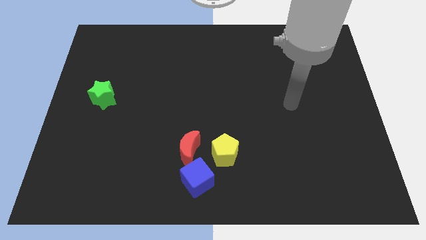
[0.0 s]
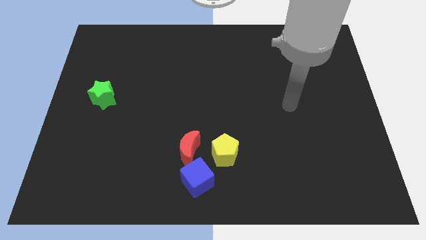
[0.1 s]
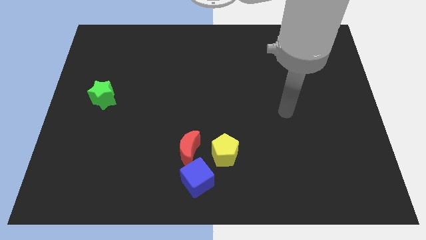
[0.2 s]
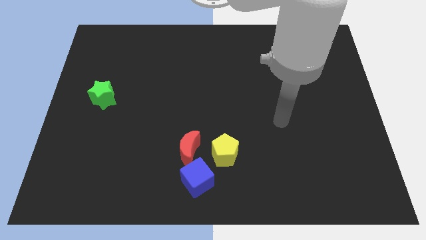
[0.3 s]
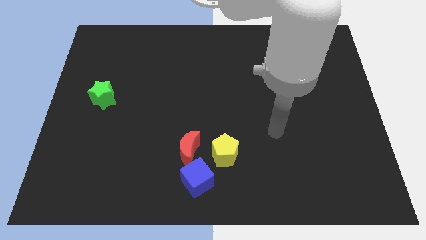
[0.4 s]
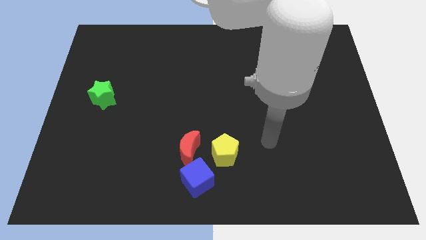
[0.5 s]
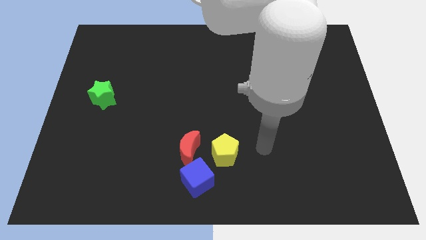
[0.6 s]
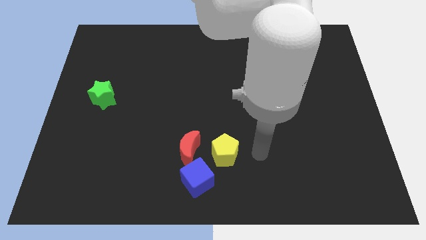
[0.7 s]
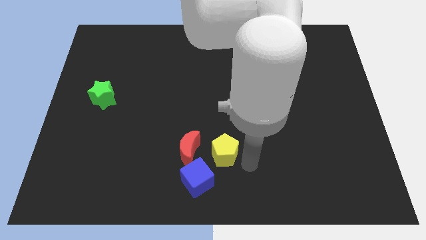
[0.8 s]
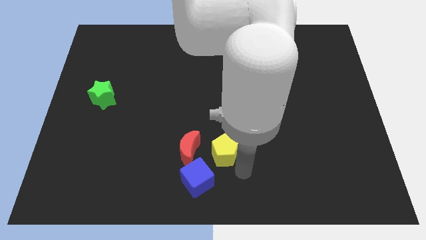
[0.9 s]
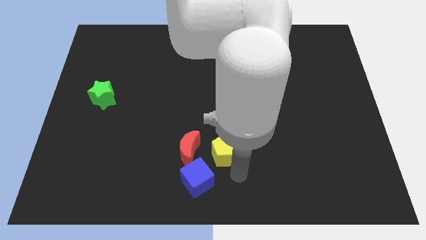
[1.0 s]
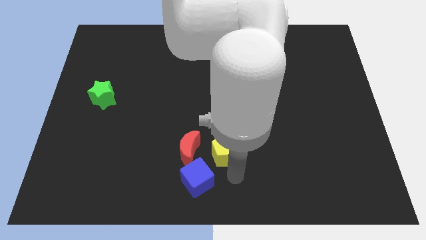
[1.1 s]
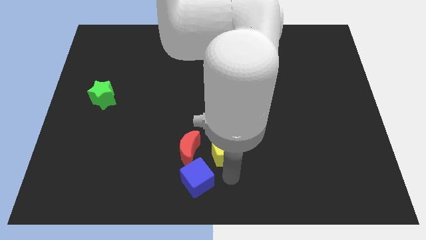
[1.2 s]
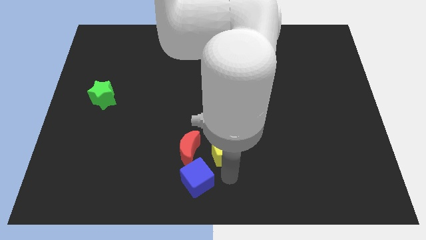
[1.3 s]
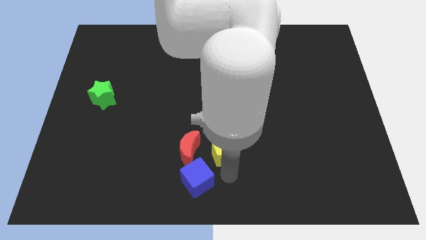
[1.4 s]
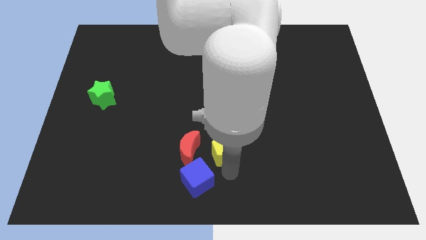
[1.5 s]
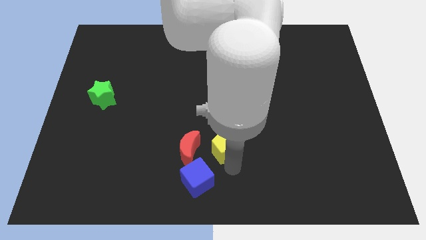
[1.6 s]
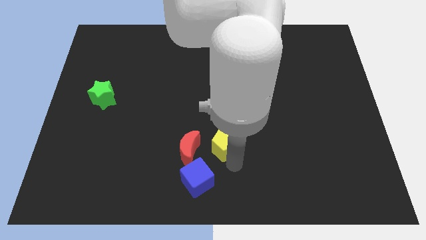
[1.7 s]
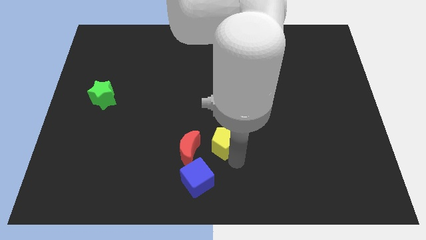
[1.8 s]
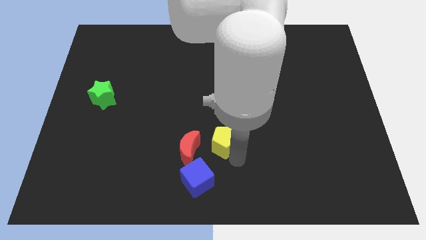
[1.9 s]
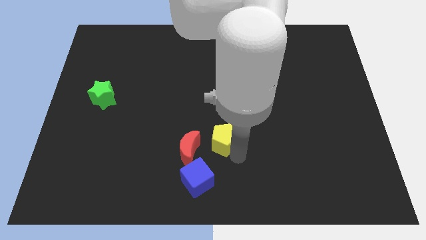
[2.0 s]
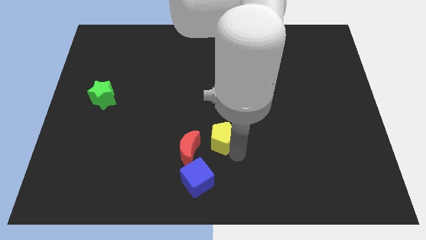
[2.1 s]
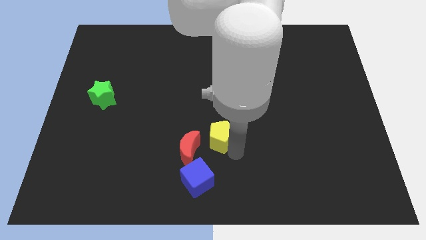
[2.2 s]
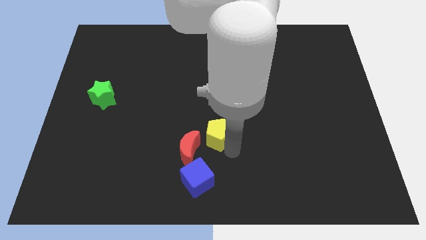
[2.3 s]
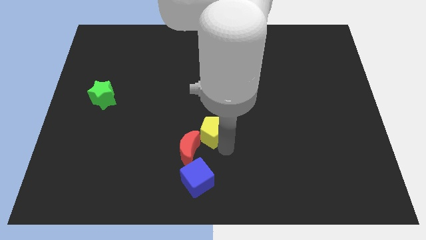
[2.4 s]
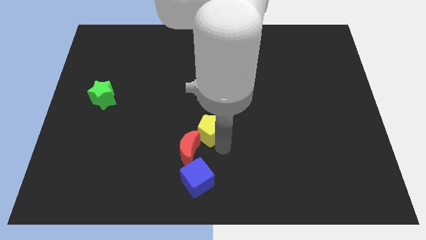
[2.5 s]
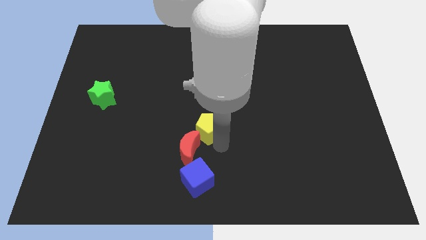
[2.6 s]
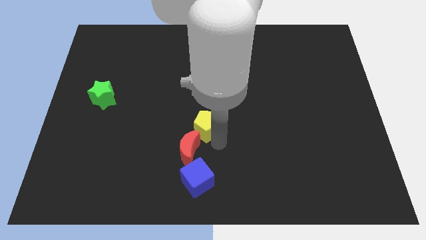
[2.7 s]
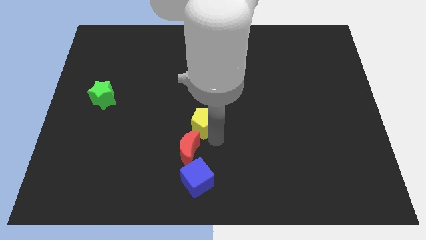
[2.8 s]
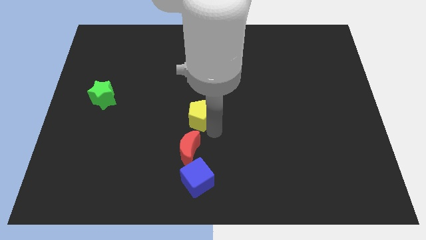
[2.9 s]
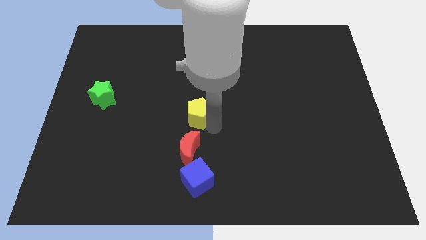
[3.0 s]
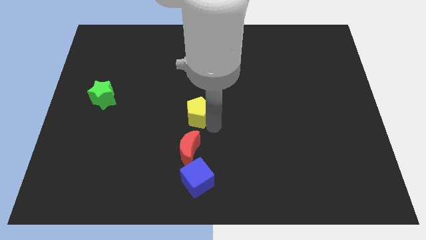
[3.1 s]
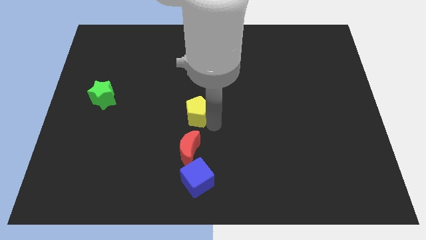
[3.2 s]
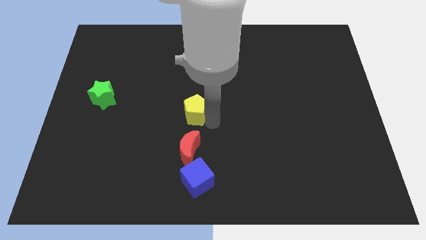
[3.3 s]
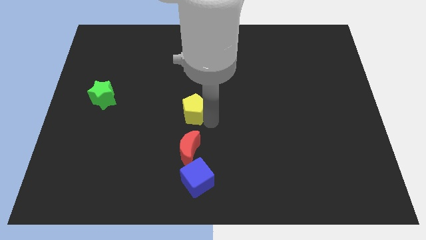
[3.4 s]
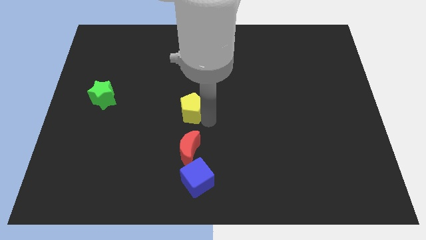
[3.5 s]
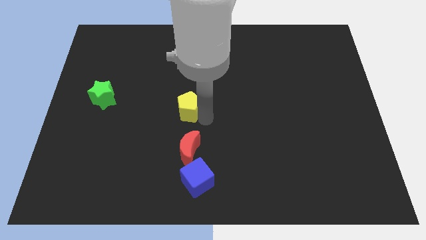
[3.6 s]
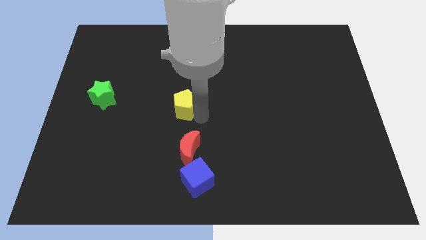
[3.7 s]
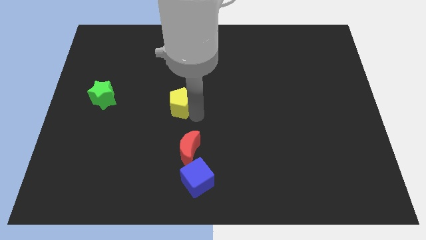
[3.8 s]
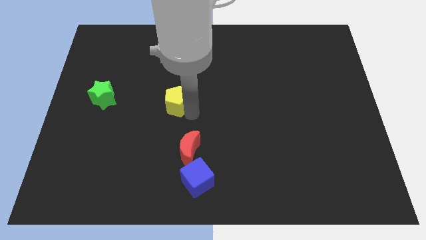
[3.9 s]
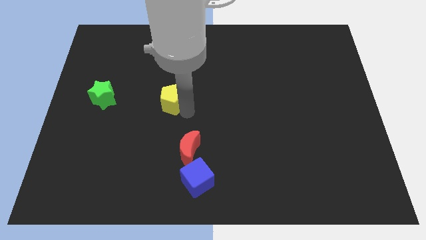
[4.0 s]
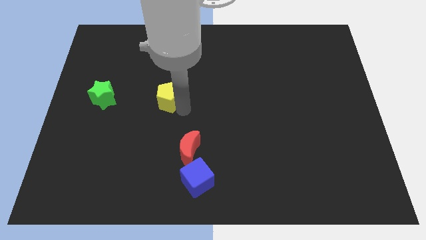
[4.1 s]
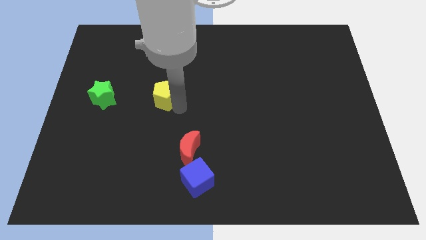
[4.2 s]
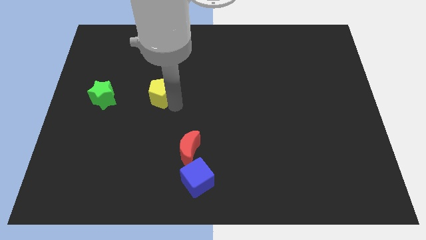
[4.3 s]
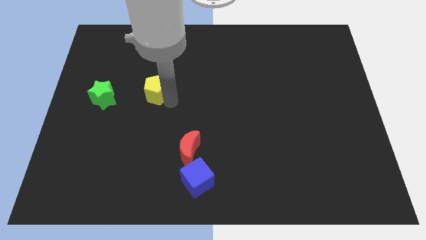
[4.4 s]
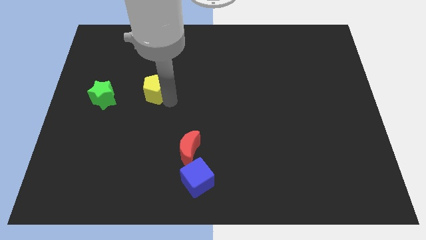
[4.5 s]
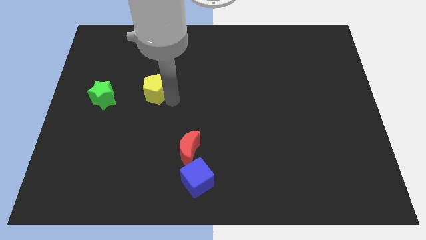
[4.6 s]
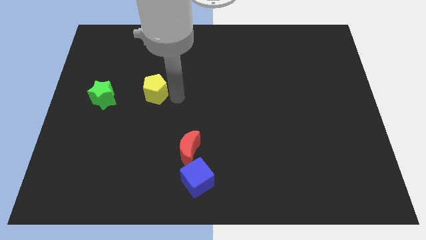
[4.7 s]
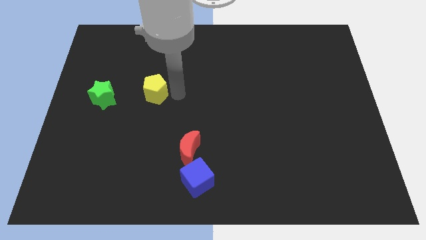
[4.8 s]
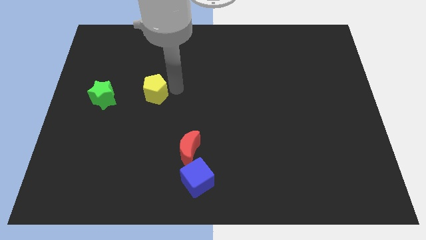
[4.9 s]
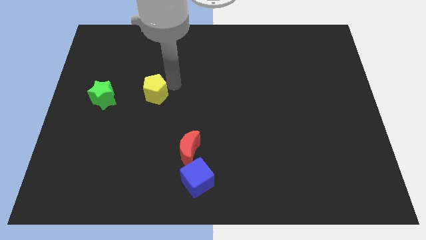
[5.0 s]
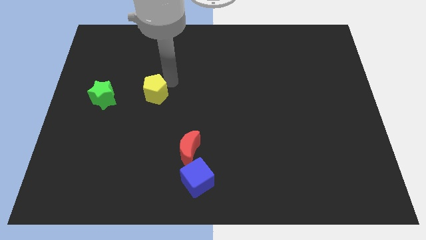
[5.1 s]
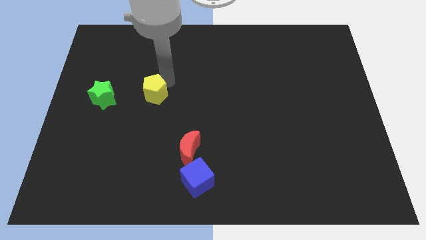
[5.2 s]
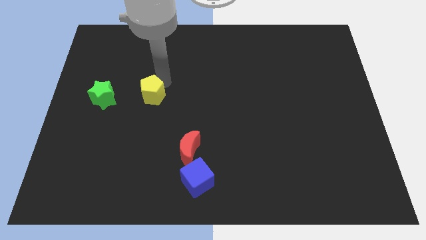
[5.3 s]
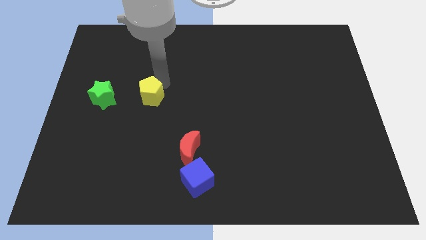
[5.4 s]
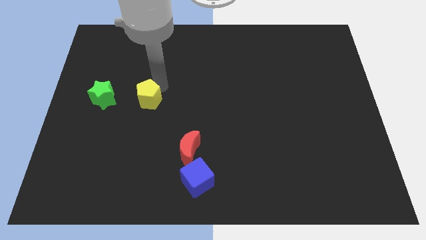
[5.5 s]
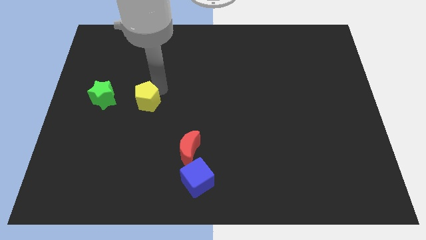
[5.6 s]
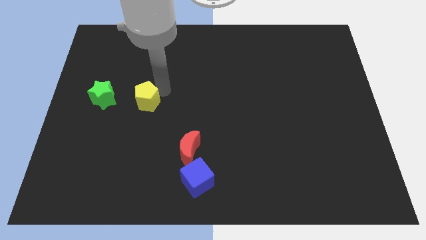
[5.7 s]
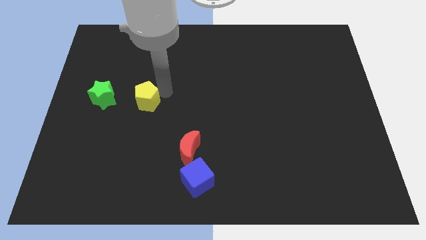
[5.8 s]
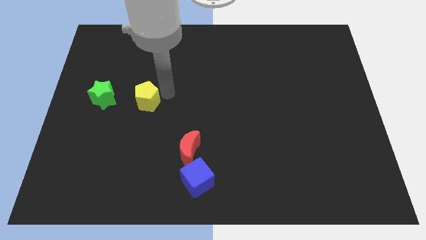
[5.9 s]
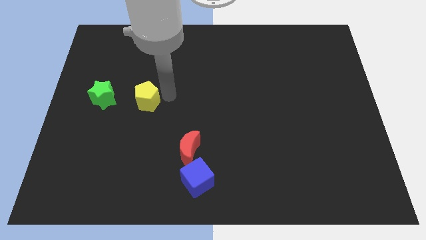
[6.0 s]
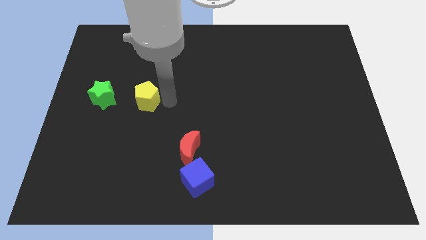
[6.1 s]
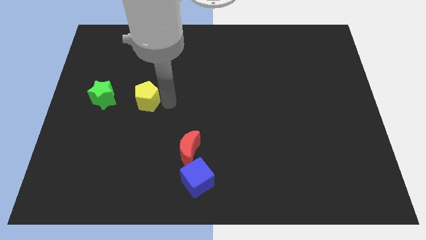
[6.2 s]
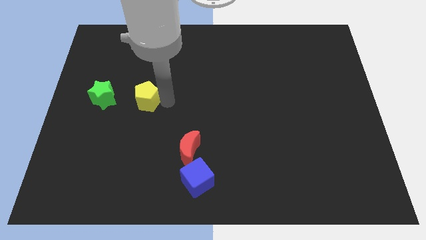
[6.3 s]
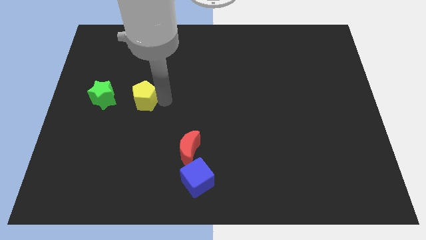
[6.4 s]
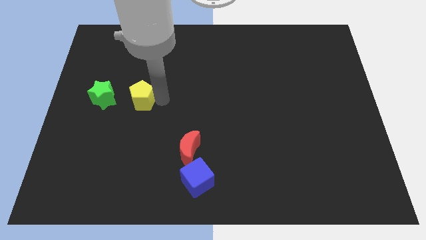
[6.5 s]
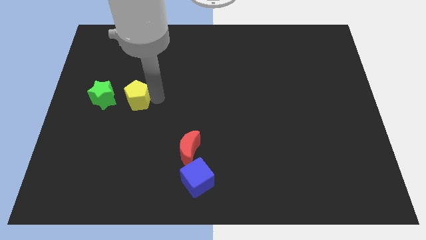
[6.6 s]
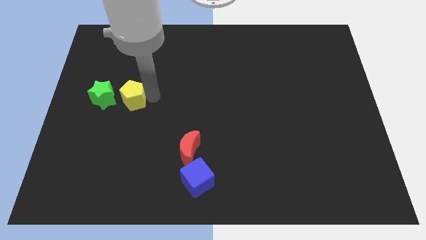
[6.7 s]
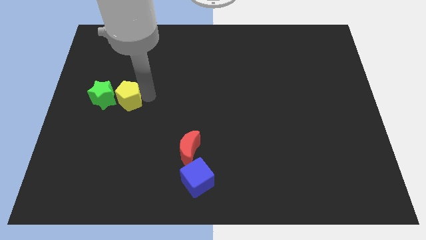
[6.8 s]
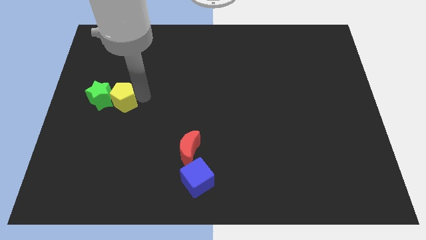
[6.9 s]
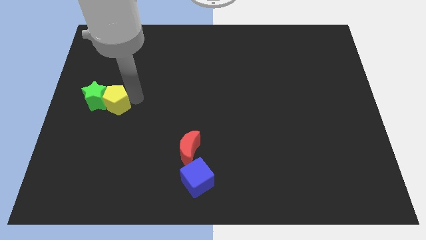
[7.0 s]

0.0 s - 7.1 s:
push the pentagon next to the green block

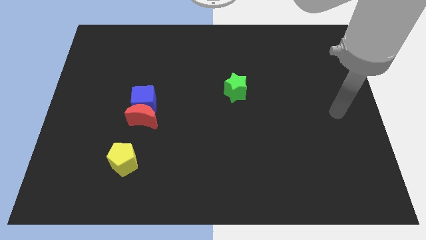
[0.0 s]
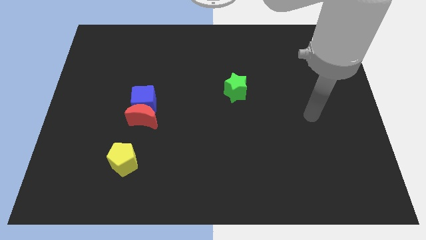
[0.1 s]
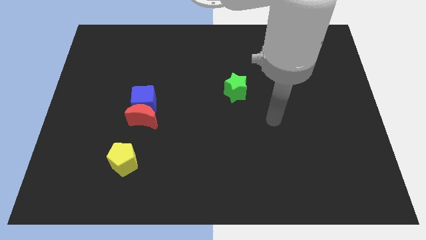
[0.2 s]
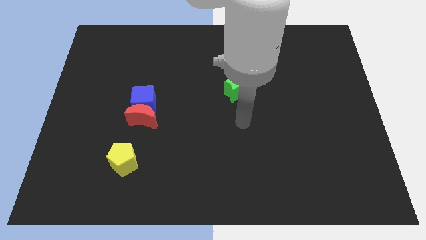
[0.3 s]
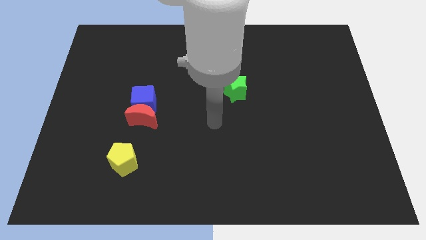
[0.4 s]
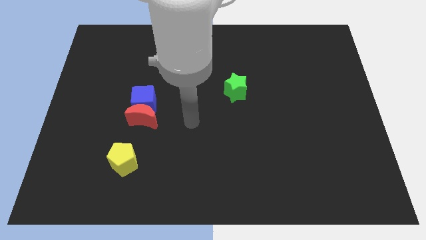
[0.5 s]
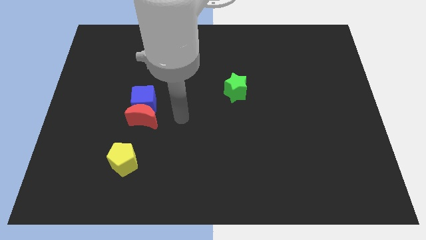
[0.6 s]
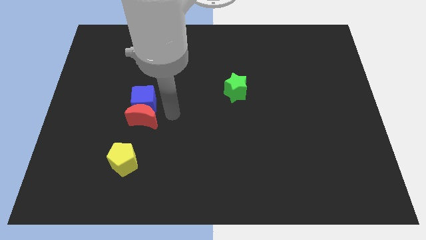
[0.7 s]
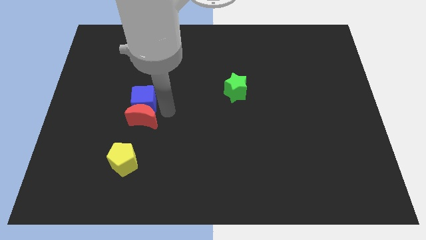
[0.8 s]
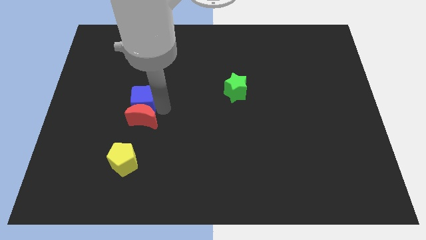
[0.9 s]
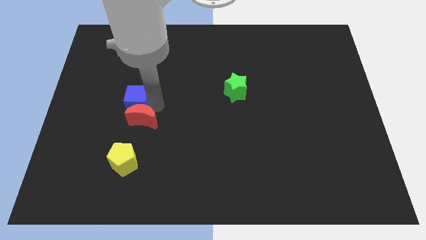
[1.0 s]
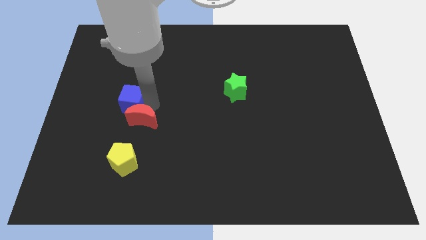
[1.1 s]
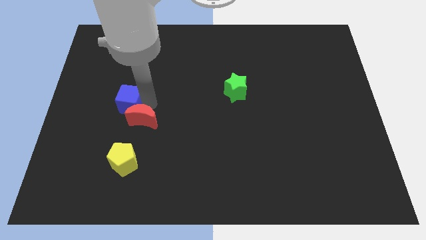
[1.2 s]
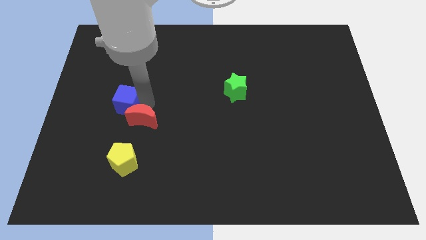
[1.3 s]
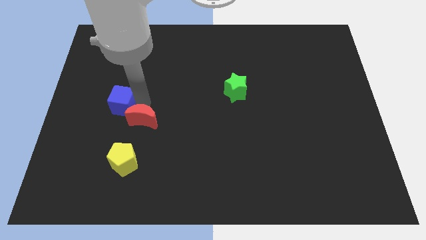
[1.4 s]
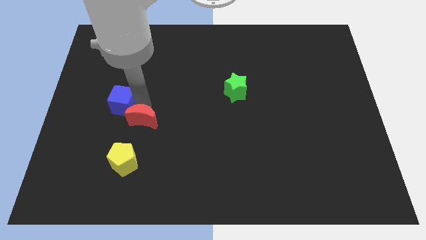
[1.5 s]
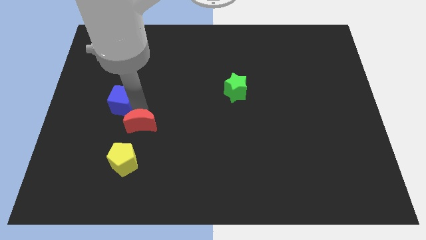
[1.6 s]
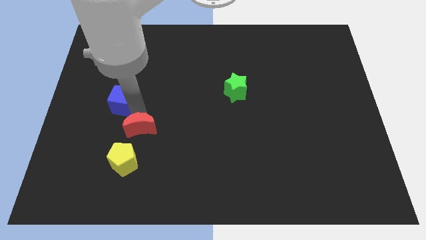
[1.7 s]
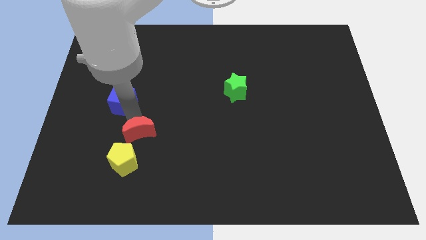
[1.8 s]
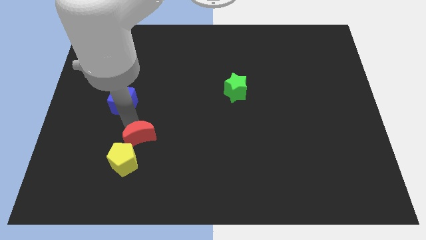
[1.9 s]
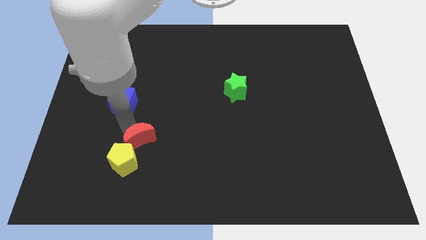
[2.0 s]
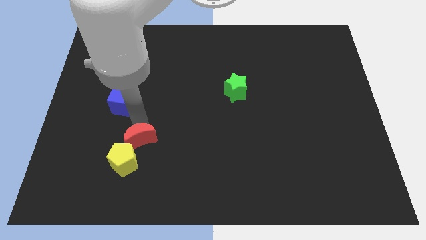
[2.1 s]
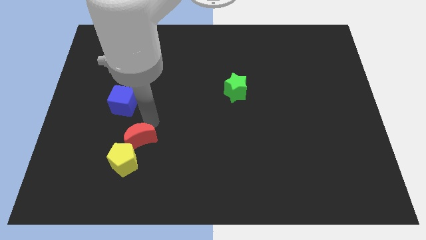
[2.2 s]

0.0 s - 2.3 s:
slide the red block close to the yellow block
